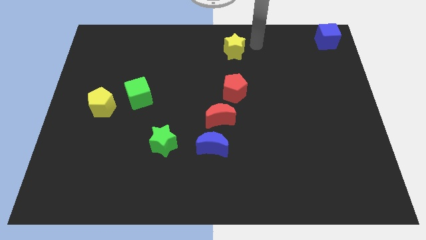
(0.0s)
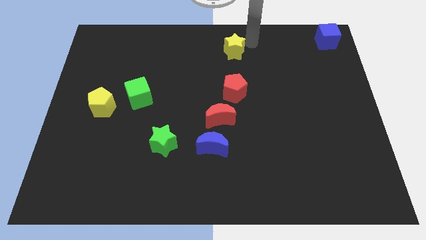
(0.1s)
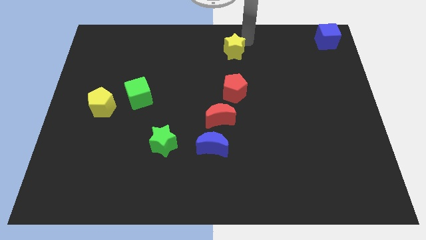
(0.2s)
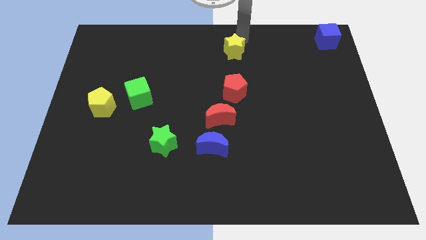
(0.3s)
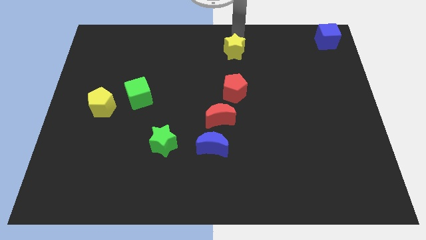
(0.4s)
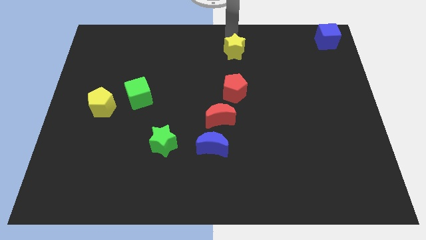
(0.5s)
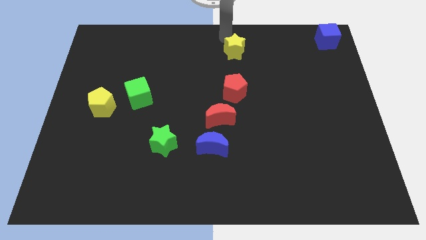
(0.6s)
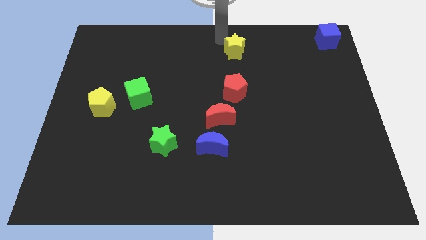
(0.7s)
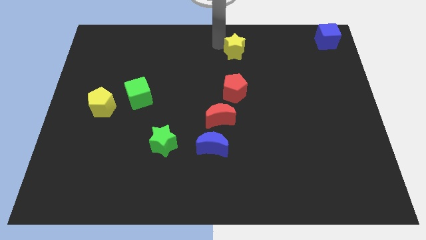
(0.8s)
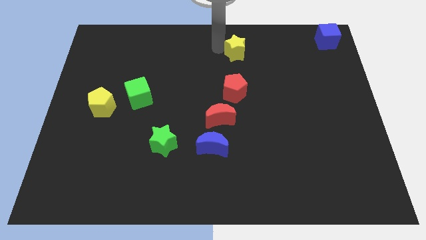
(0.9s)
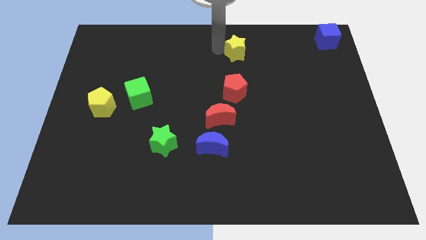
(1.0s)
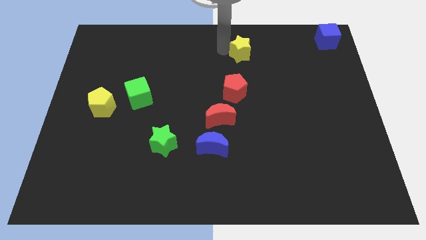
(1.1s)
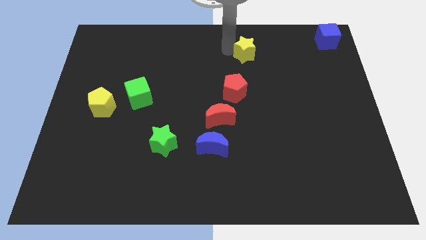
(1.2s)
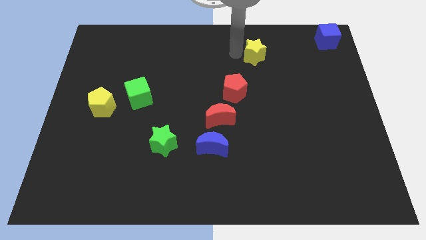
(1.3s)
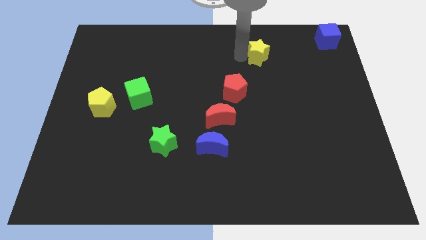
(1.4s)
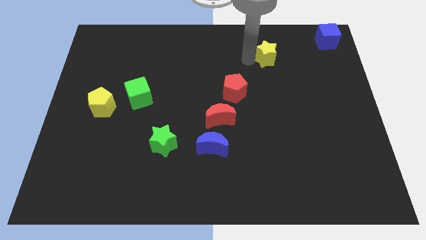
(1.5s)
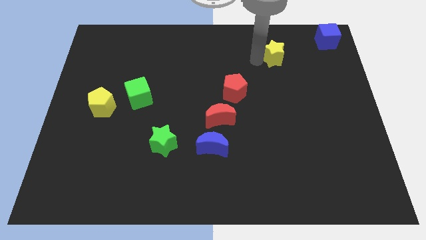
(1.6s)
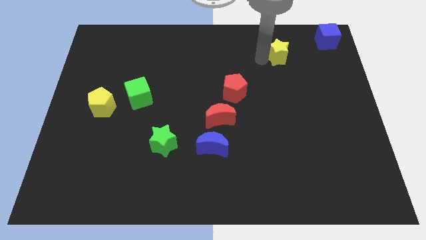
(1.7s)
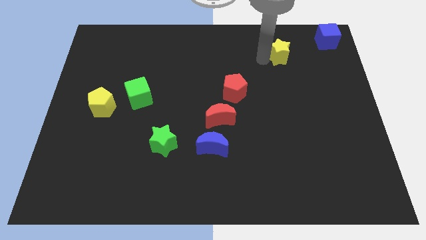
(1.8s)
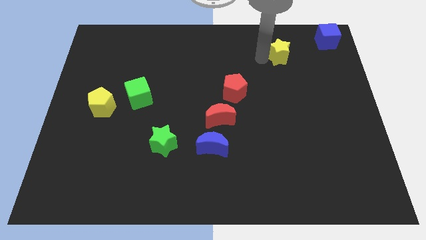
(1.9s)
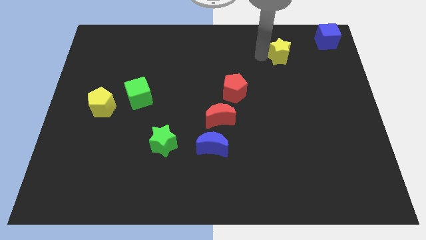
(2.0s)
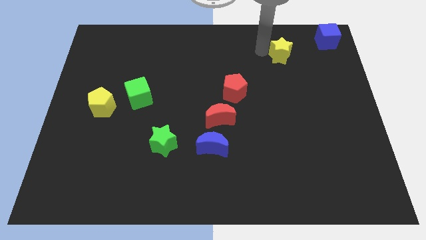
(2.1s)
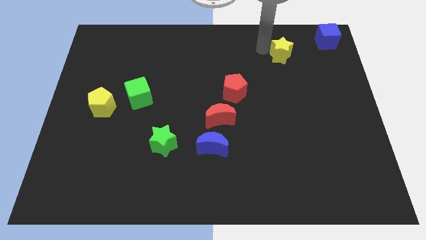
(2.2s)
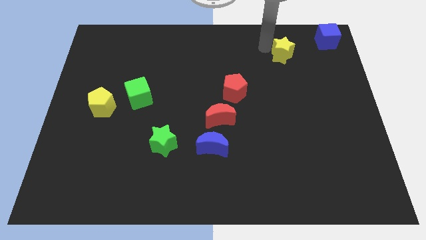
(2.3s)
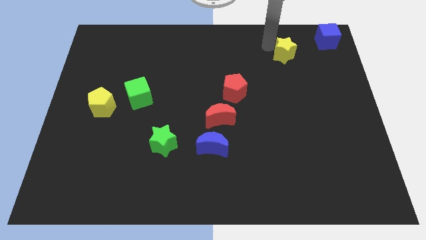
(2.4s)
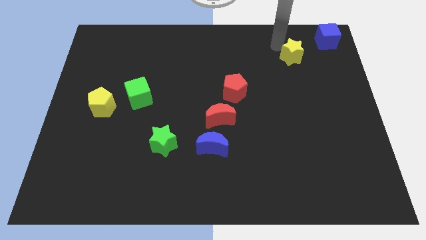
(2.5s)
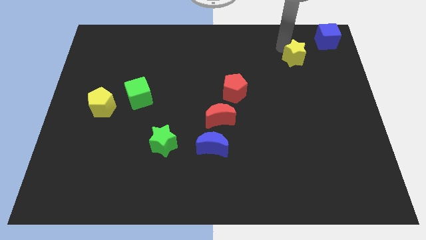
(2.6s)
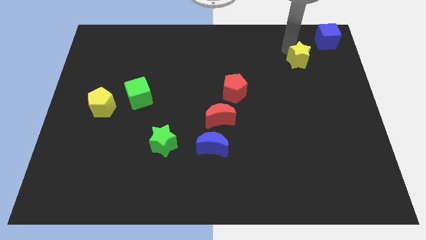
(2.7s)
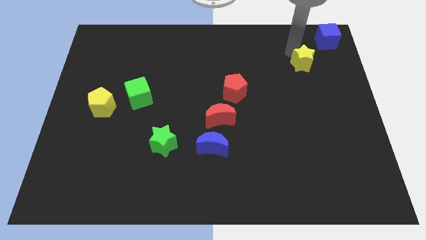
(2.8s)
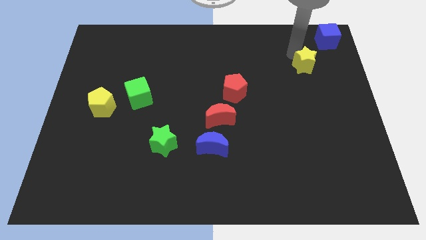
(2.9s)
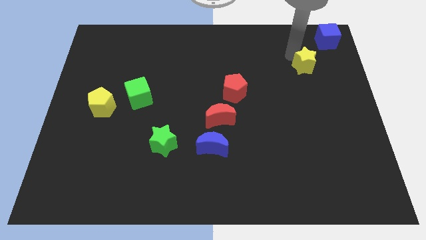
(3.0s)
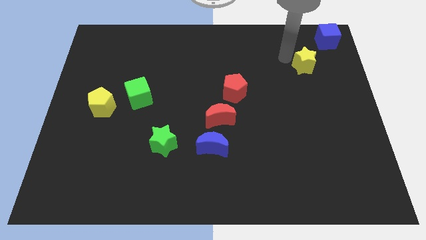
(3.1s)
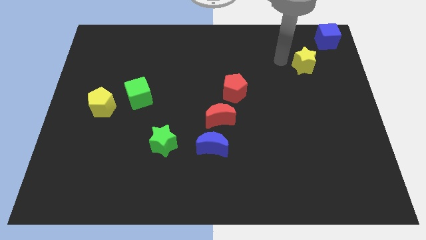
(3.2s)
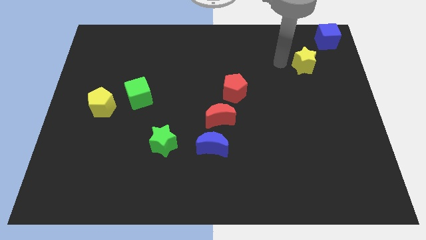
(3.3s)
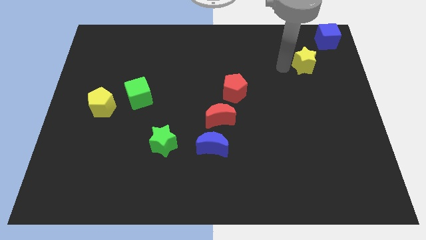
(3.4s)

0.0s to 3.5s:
slide the yellow star diagonally top right to the red pentagon

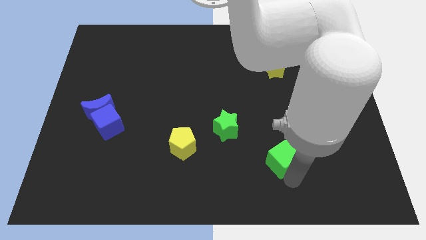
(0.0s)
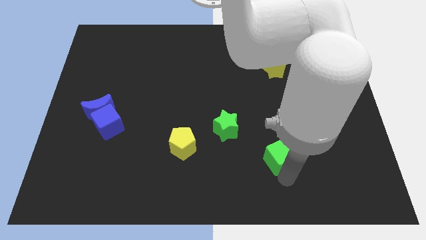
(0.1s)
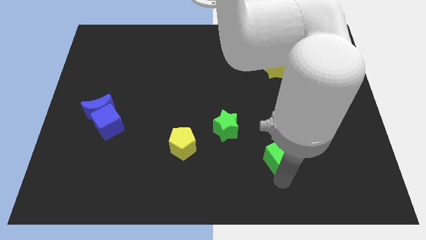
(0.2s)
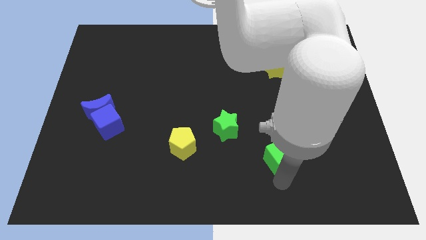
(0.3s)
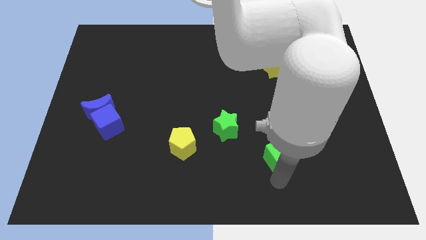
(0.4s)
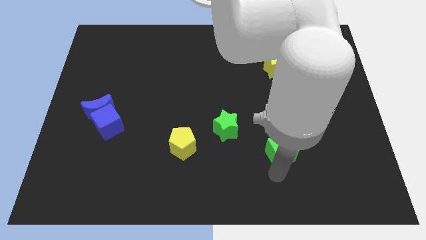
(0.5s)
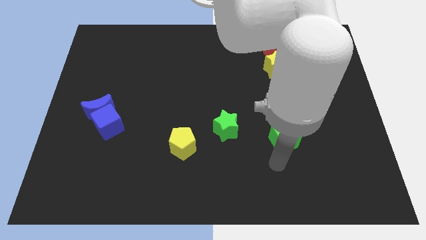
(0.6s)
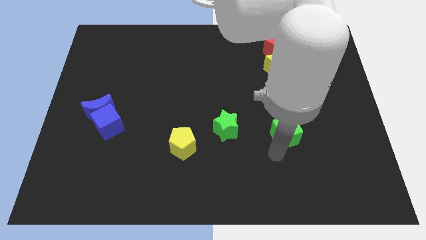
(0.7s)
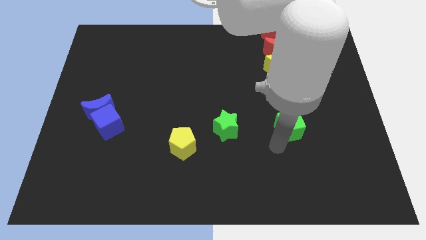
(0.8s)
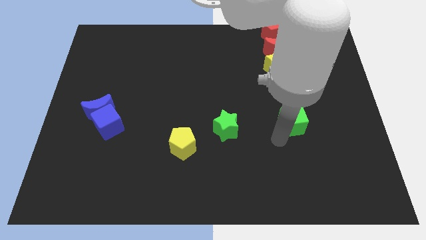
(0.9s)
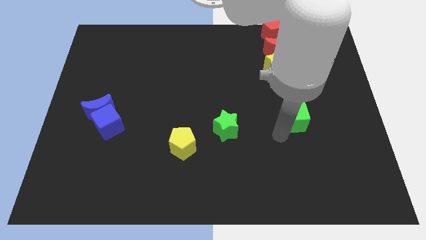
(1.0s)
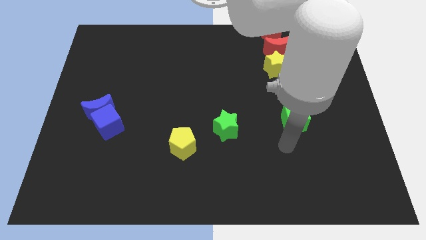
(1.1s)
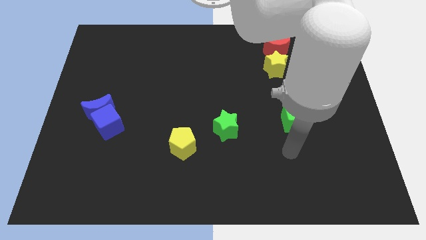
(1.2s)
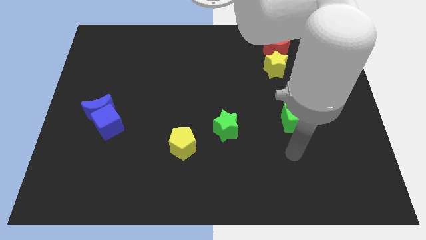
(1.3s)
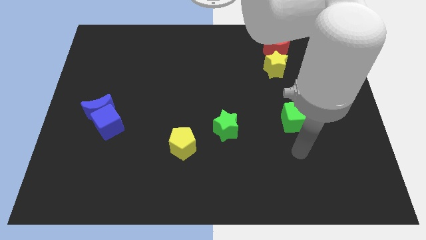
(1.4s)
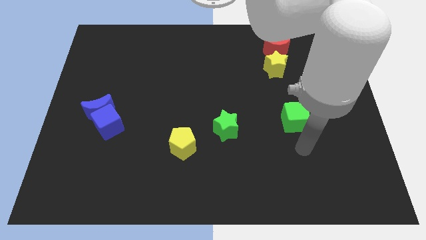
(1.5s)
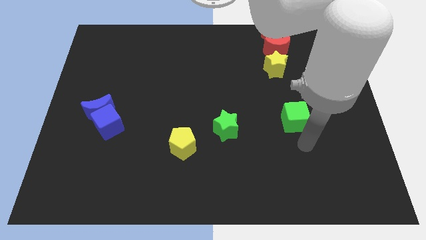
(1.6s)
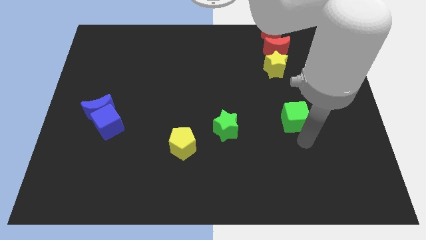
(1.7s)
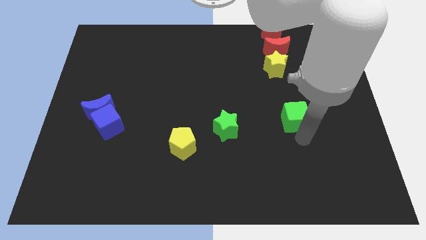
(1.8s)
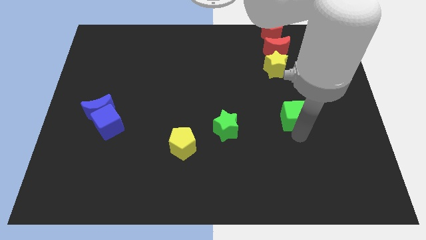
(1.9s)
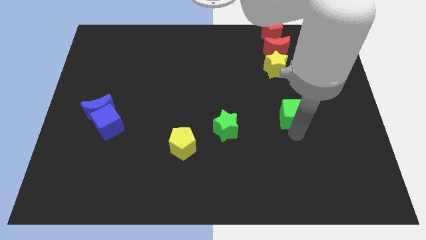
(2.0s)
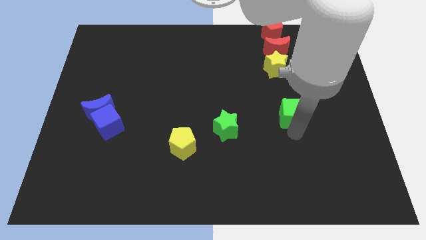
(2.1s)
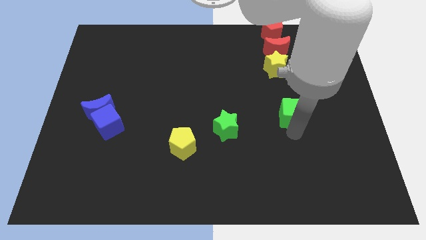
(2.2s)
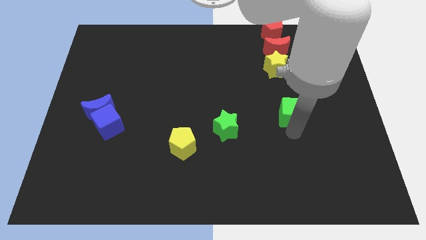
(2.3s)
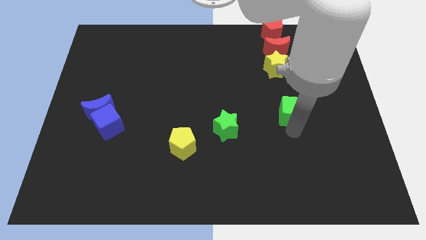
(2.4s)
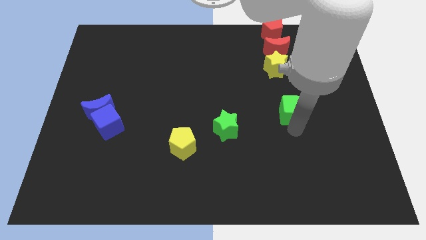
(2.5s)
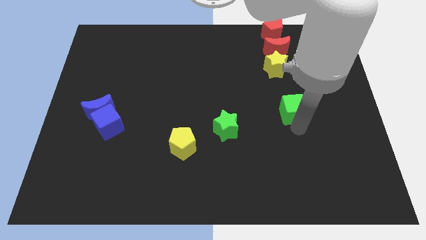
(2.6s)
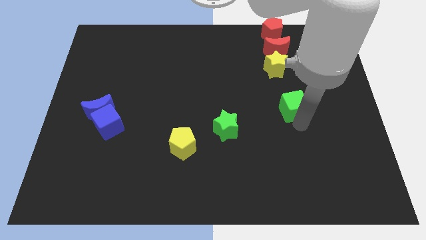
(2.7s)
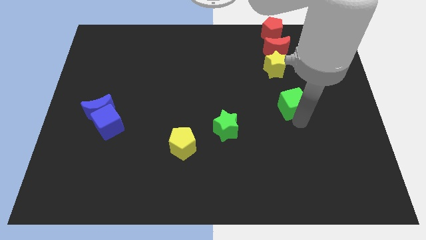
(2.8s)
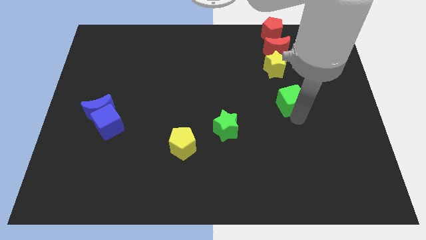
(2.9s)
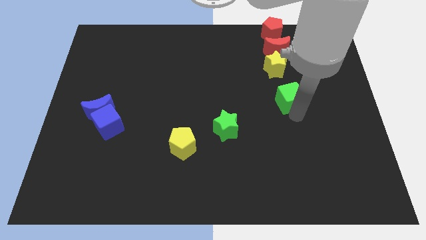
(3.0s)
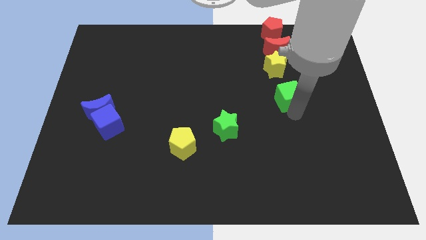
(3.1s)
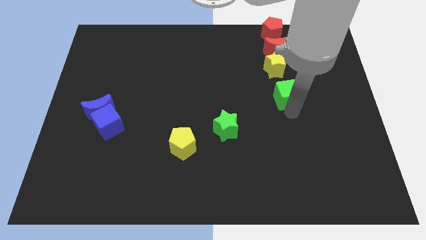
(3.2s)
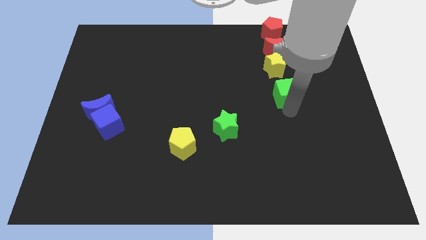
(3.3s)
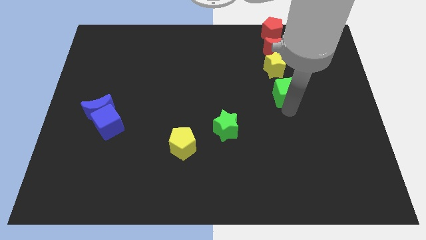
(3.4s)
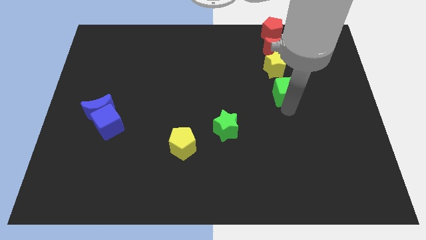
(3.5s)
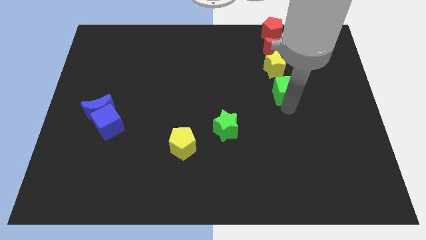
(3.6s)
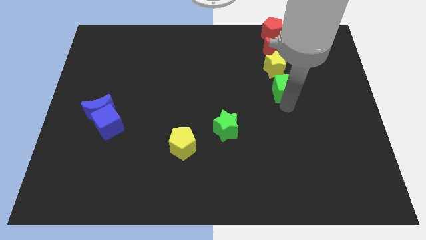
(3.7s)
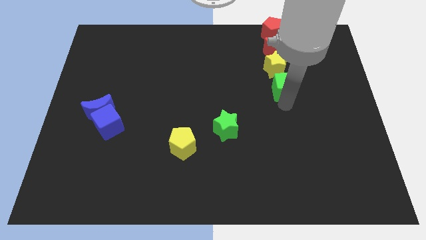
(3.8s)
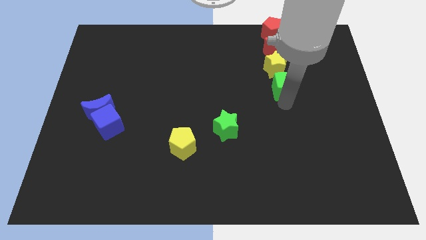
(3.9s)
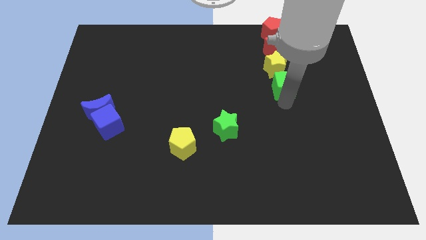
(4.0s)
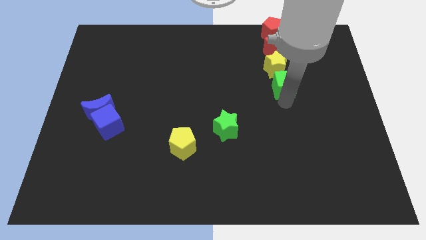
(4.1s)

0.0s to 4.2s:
move blue cube towards yellow star

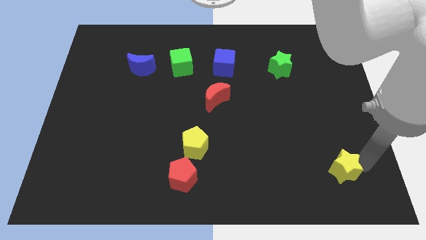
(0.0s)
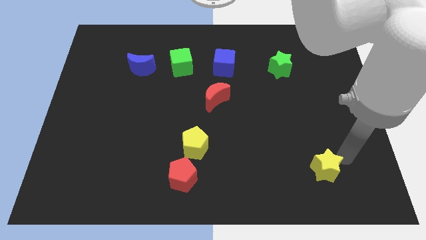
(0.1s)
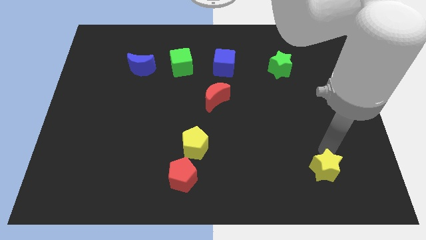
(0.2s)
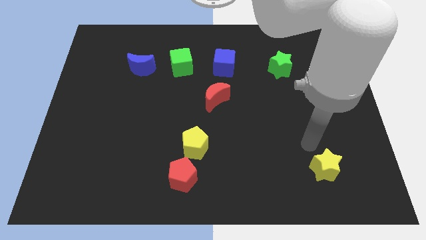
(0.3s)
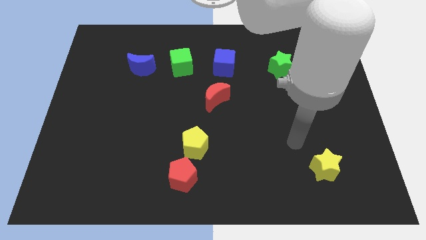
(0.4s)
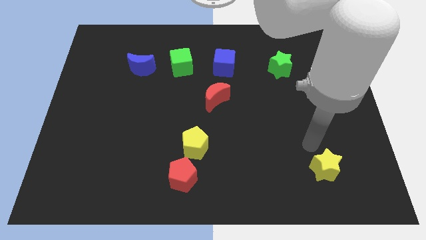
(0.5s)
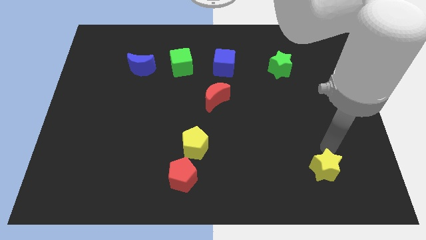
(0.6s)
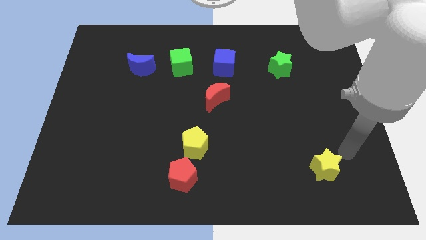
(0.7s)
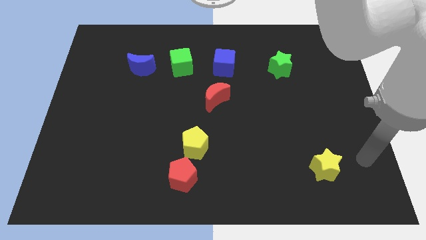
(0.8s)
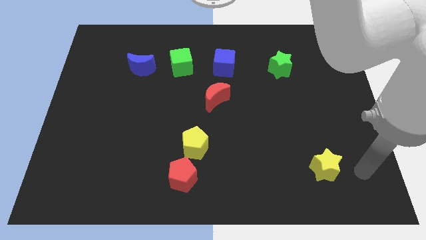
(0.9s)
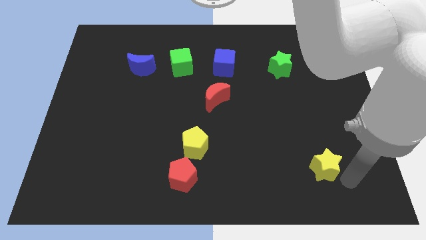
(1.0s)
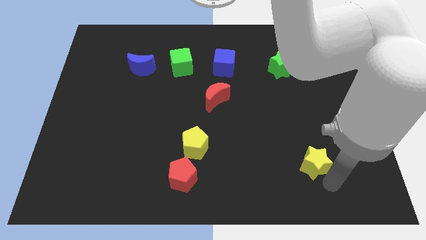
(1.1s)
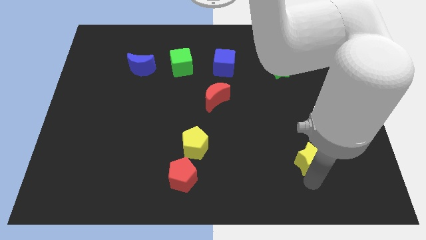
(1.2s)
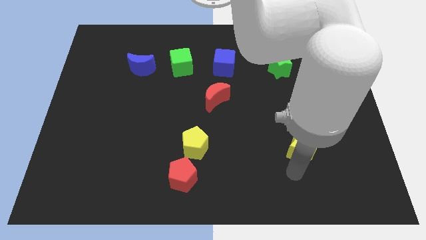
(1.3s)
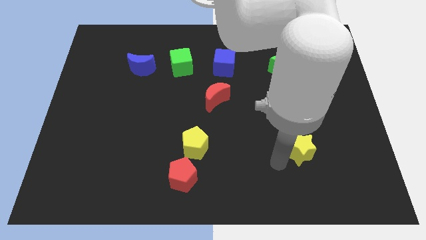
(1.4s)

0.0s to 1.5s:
place yellow star below green star
